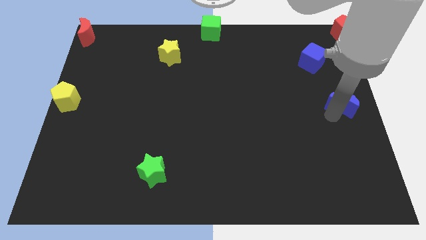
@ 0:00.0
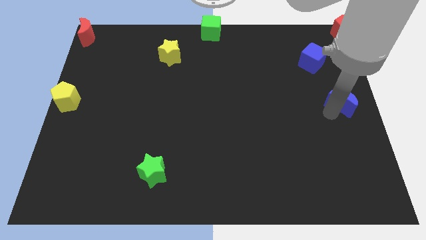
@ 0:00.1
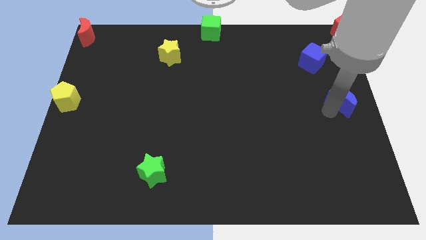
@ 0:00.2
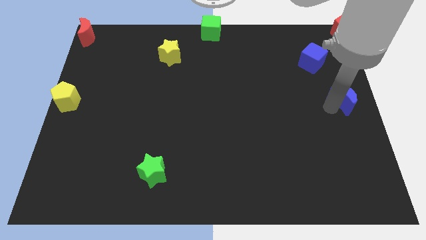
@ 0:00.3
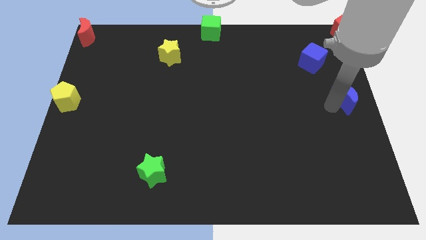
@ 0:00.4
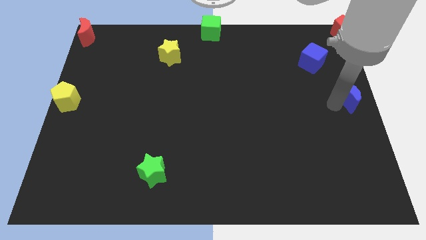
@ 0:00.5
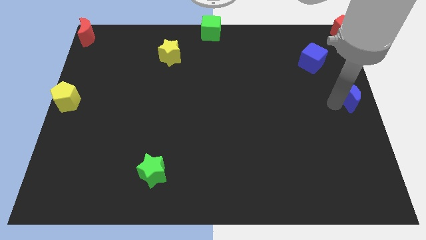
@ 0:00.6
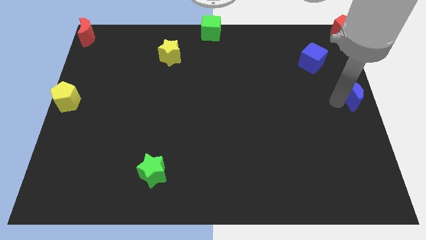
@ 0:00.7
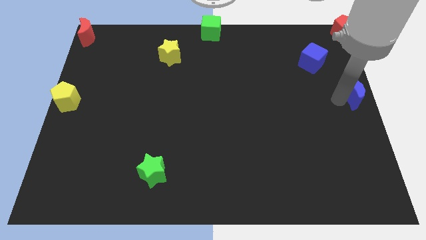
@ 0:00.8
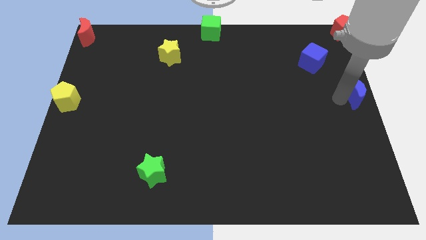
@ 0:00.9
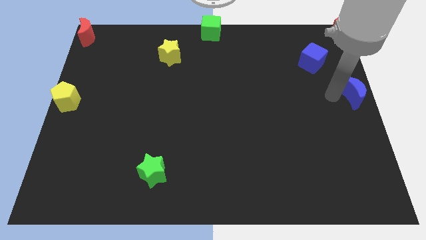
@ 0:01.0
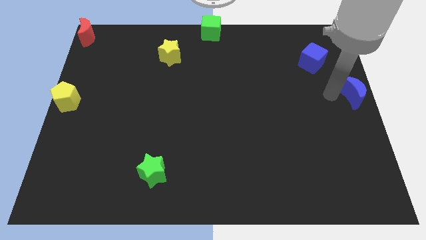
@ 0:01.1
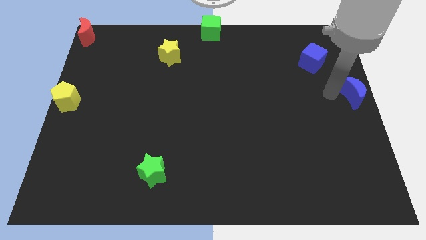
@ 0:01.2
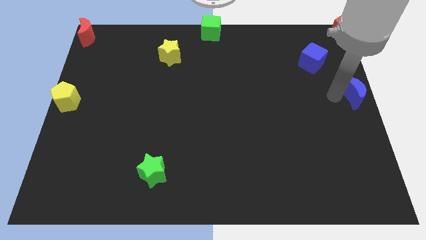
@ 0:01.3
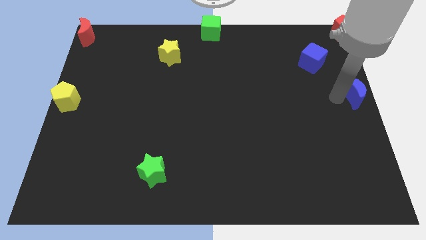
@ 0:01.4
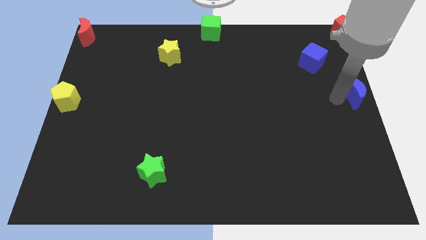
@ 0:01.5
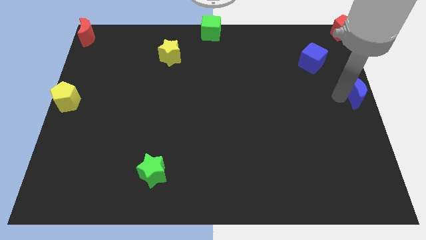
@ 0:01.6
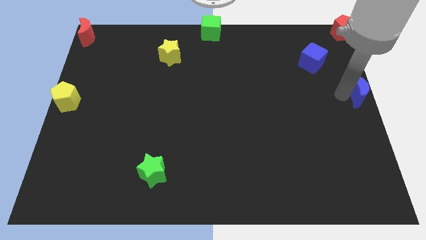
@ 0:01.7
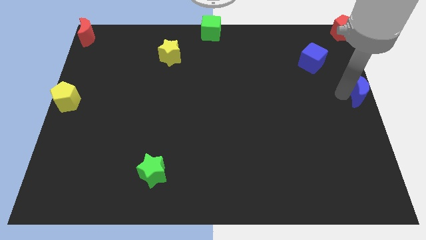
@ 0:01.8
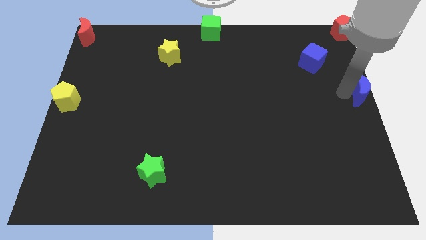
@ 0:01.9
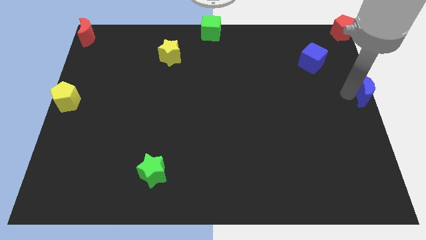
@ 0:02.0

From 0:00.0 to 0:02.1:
place blue crescent towards middle left end of the board

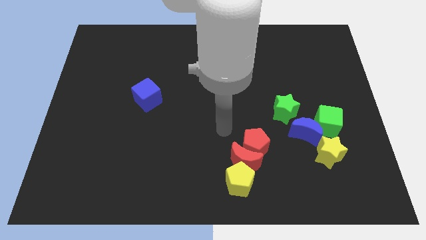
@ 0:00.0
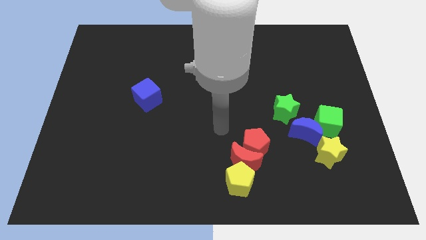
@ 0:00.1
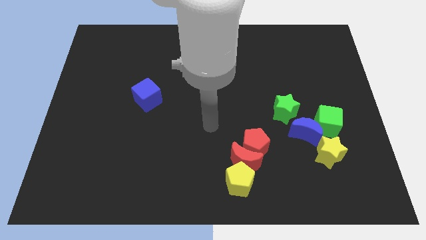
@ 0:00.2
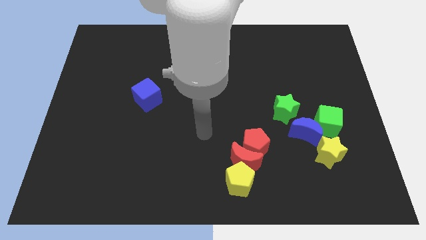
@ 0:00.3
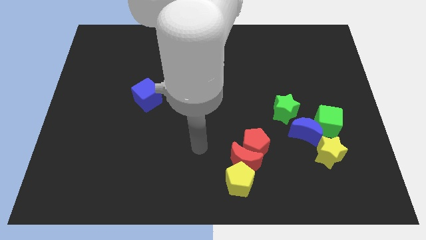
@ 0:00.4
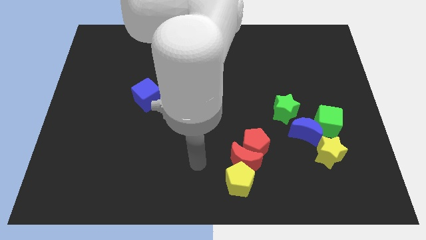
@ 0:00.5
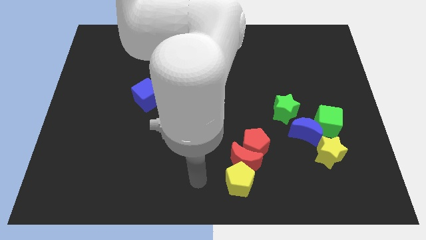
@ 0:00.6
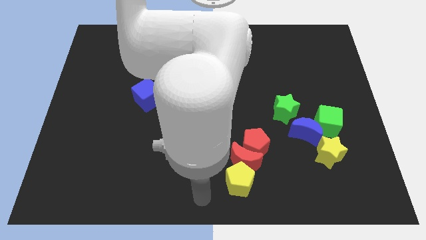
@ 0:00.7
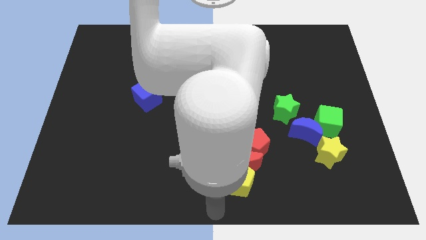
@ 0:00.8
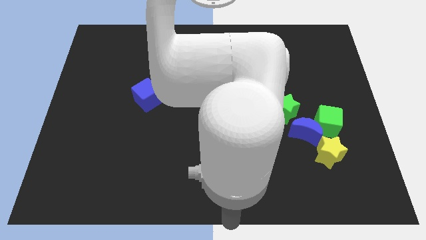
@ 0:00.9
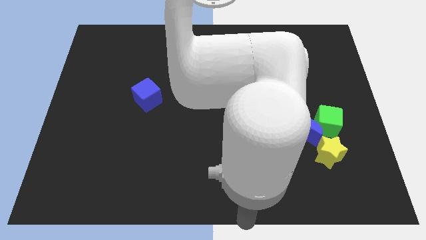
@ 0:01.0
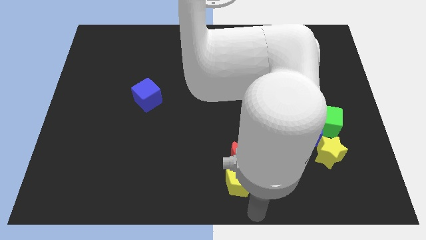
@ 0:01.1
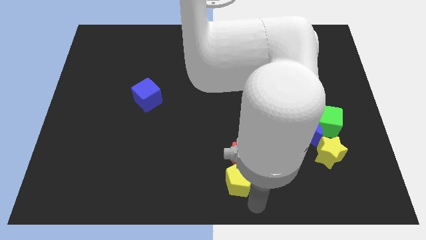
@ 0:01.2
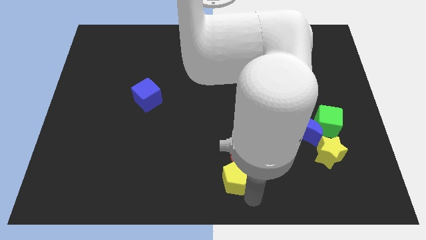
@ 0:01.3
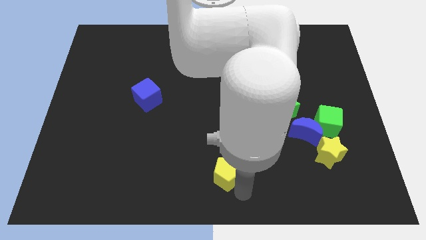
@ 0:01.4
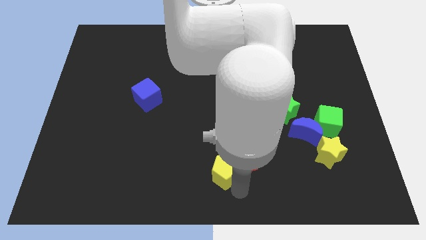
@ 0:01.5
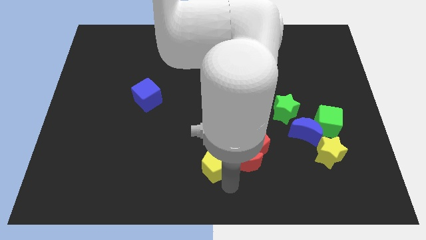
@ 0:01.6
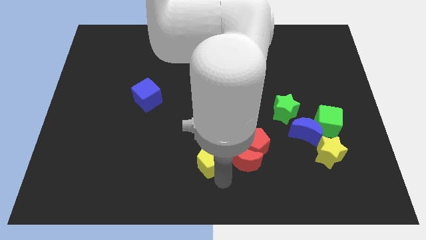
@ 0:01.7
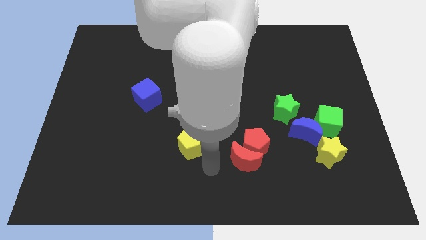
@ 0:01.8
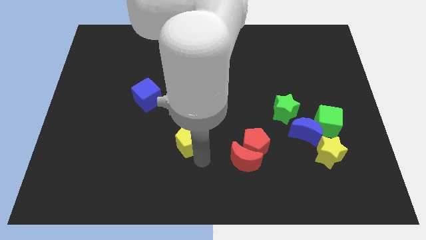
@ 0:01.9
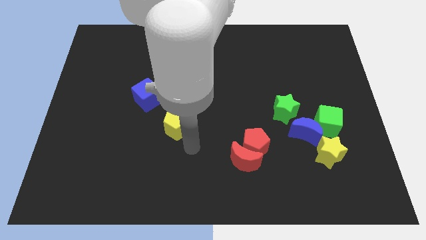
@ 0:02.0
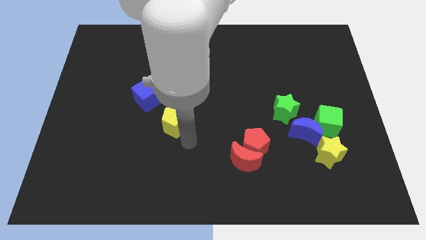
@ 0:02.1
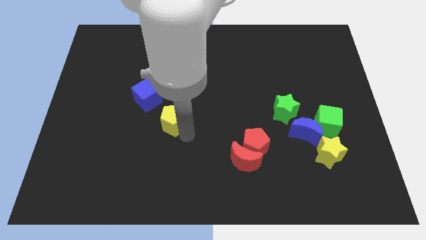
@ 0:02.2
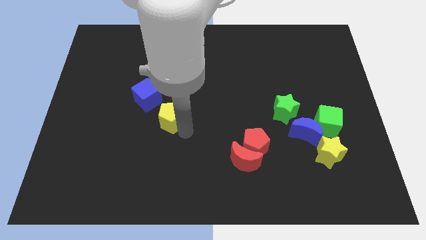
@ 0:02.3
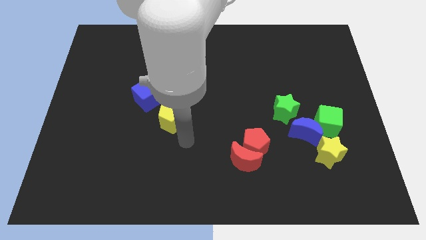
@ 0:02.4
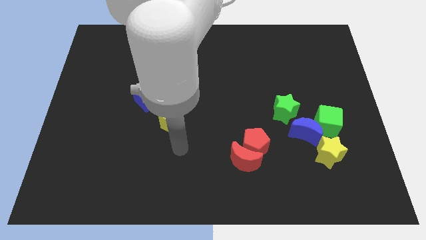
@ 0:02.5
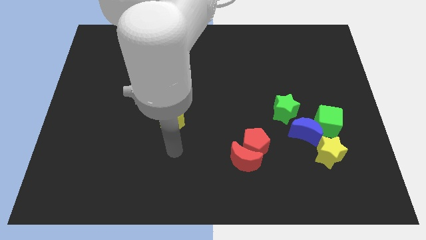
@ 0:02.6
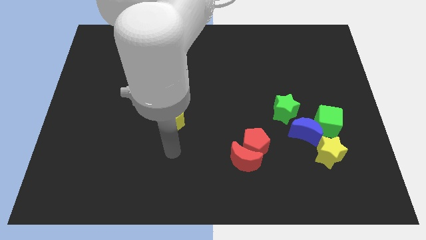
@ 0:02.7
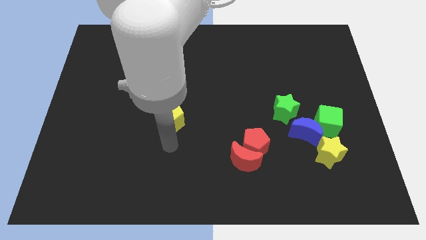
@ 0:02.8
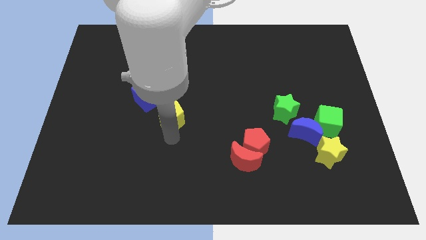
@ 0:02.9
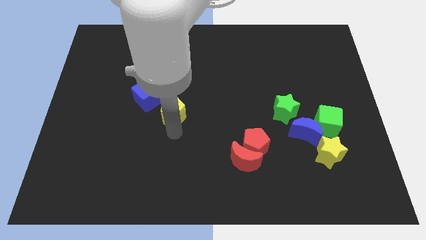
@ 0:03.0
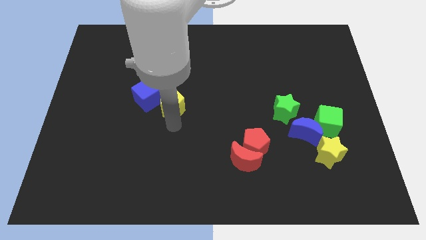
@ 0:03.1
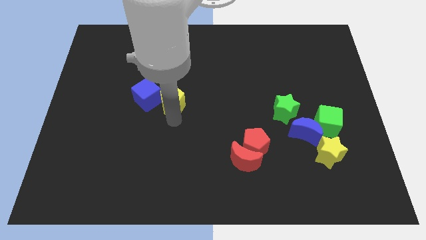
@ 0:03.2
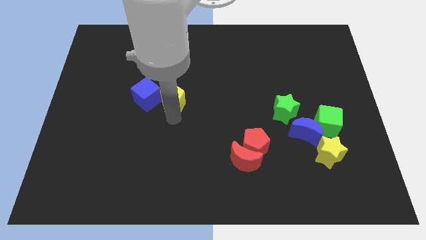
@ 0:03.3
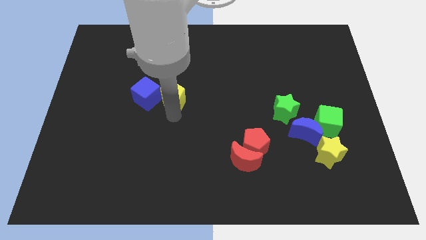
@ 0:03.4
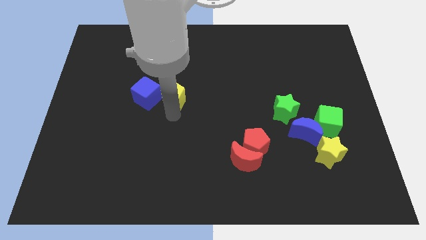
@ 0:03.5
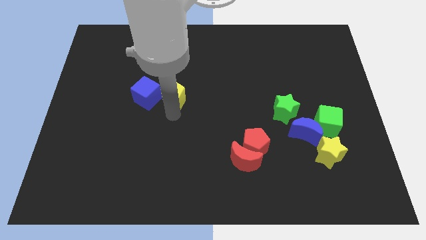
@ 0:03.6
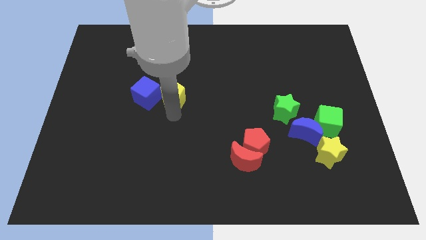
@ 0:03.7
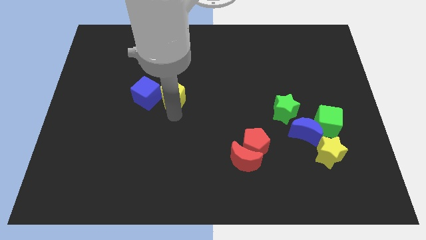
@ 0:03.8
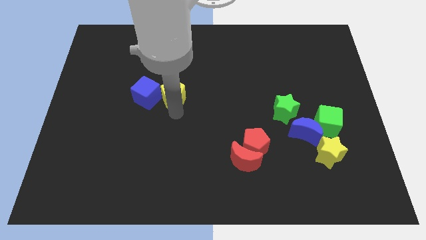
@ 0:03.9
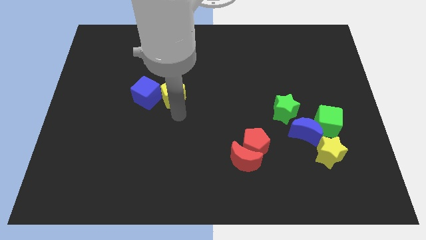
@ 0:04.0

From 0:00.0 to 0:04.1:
push the yellow pentagon to the right of the blue cube

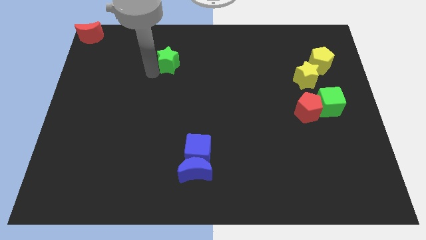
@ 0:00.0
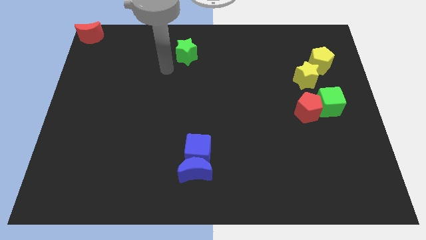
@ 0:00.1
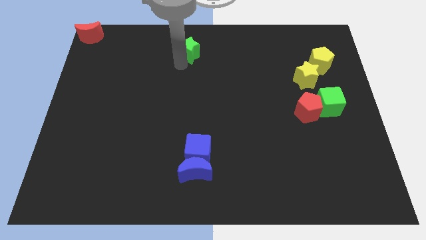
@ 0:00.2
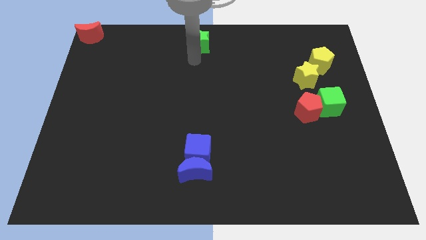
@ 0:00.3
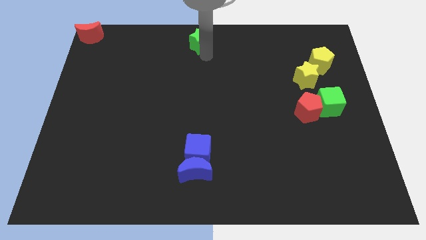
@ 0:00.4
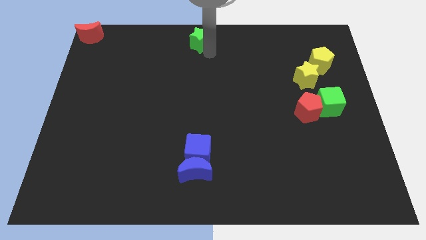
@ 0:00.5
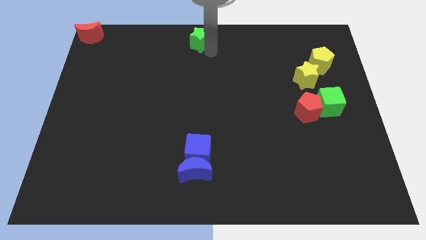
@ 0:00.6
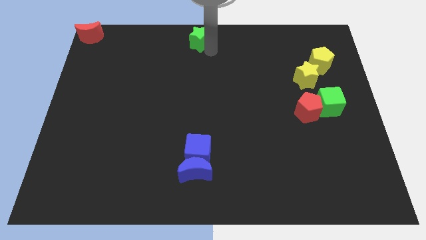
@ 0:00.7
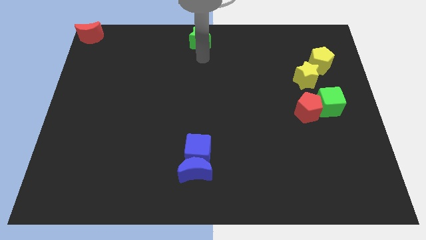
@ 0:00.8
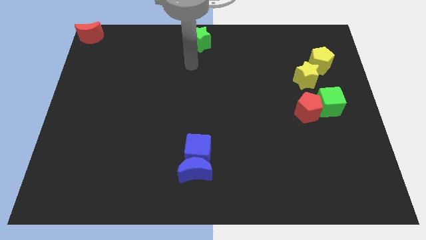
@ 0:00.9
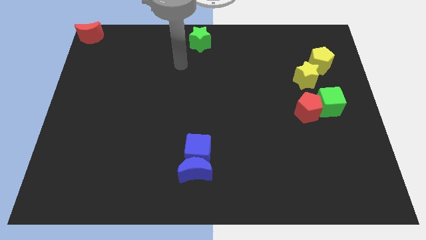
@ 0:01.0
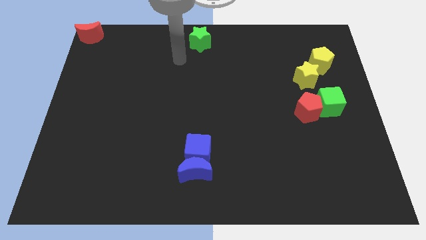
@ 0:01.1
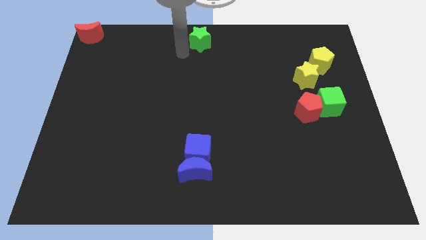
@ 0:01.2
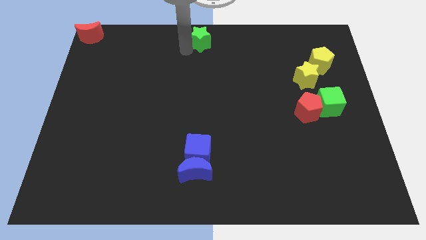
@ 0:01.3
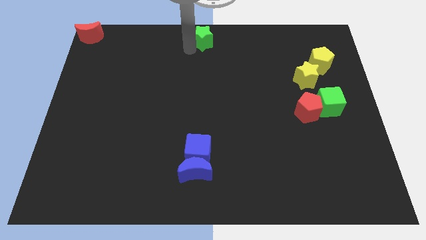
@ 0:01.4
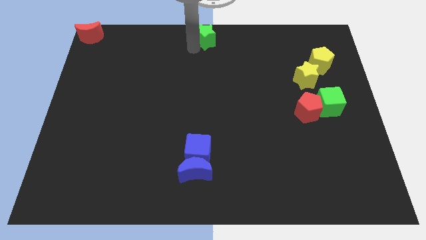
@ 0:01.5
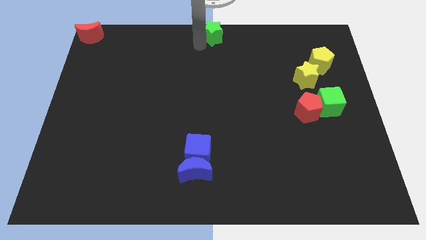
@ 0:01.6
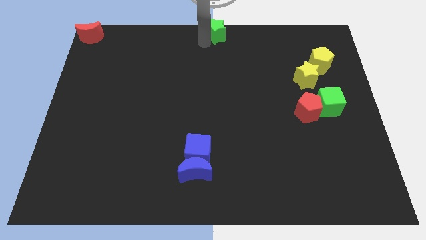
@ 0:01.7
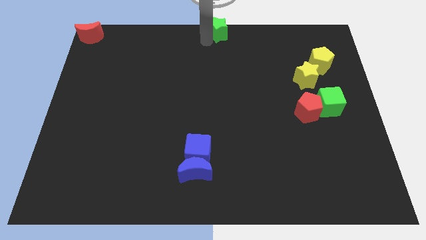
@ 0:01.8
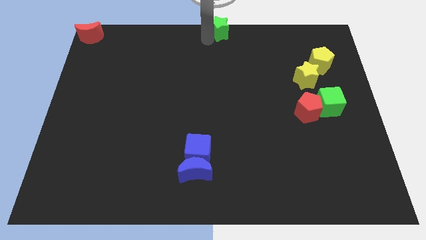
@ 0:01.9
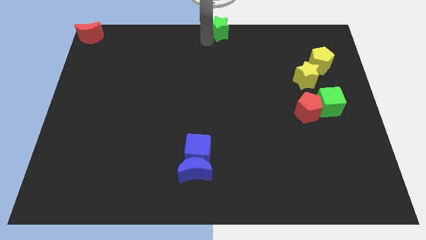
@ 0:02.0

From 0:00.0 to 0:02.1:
move the green star to the top center of the table

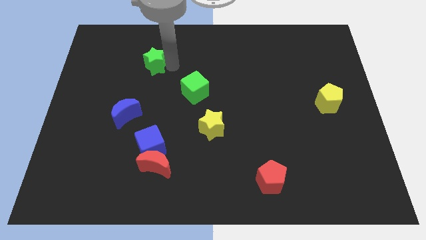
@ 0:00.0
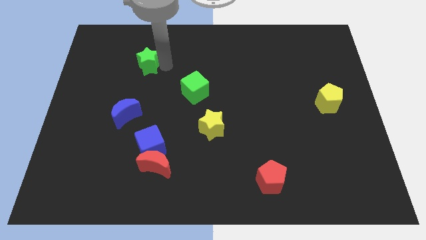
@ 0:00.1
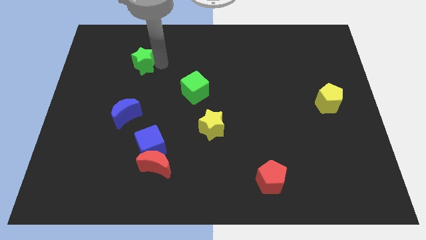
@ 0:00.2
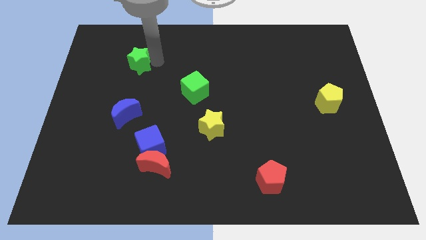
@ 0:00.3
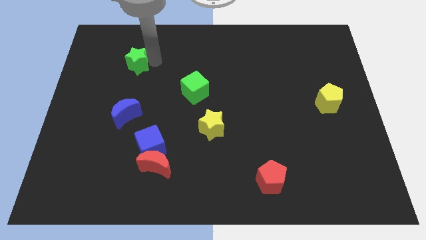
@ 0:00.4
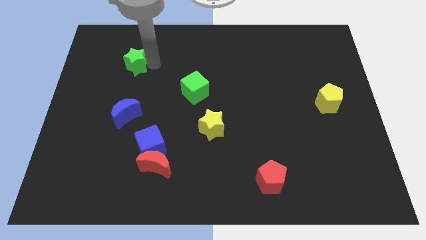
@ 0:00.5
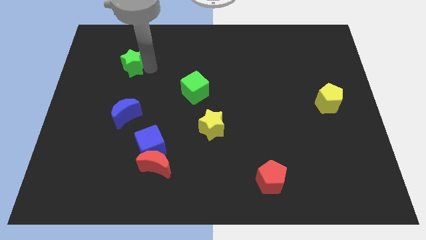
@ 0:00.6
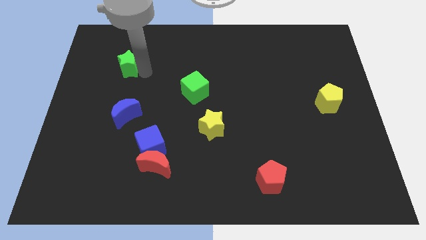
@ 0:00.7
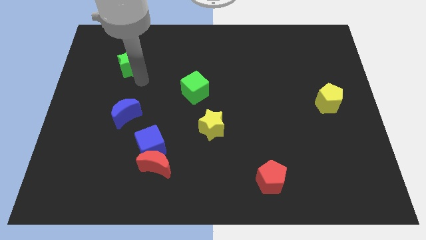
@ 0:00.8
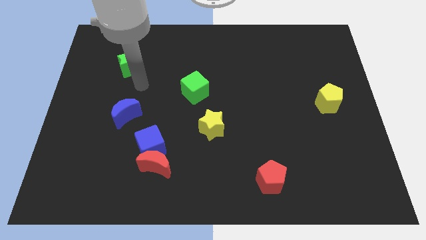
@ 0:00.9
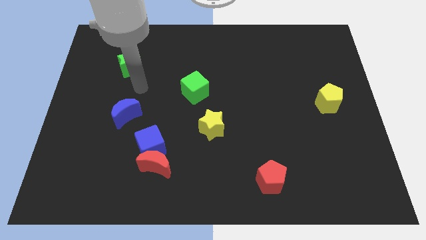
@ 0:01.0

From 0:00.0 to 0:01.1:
place the green star above the blue moon
